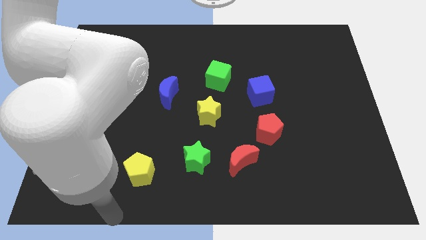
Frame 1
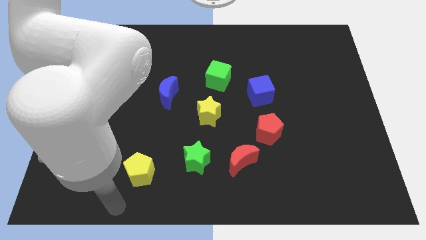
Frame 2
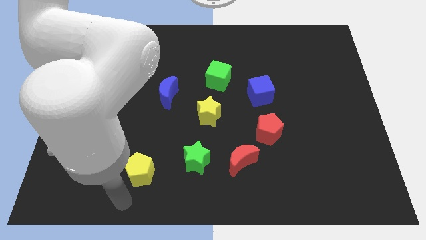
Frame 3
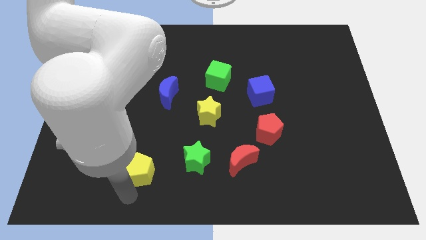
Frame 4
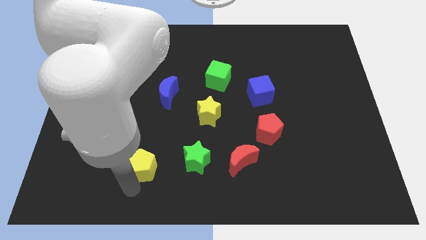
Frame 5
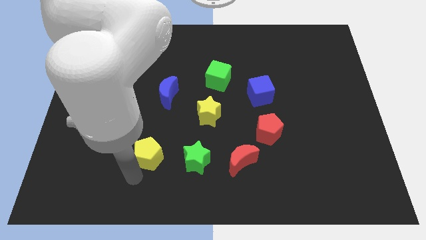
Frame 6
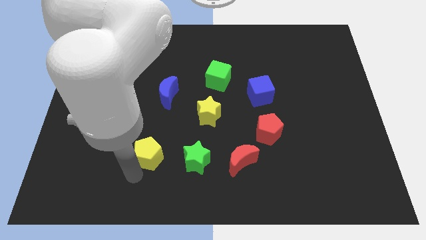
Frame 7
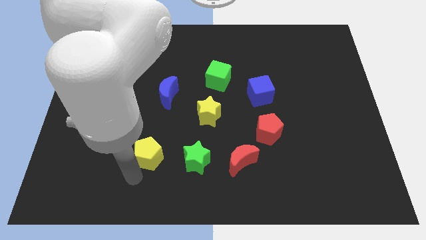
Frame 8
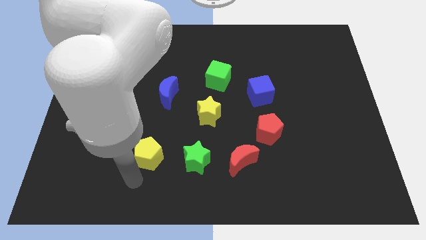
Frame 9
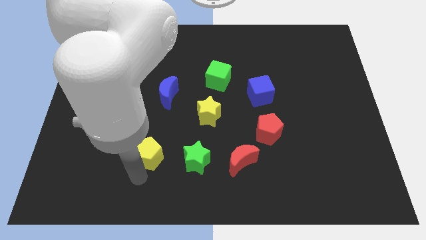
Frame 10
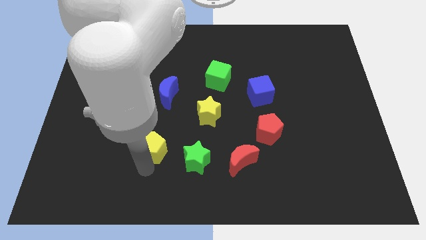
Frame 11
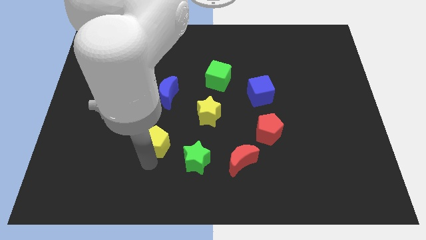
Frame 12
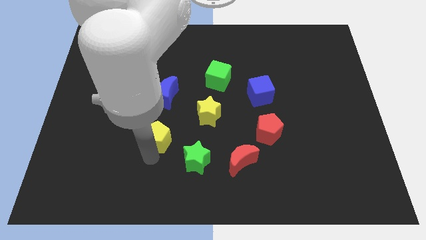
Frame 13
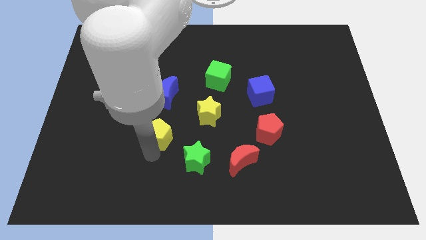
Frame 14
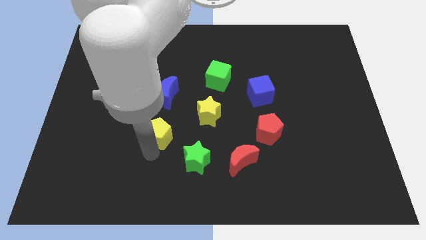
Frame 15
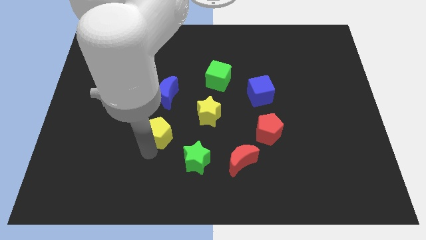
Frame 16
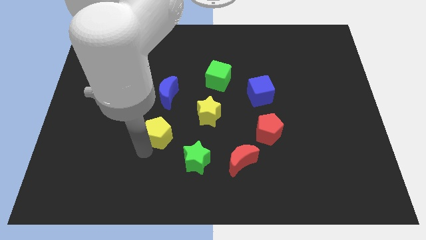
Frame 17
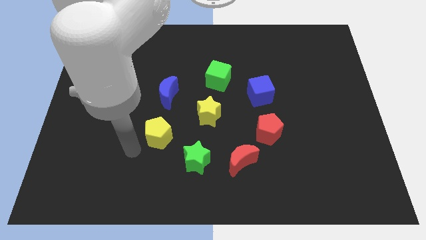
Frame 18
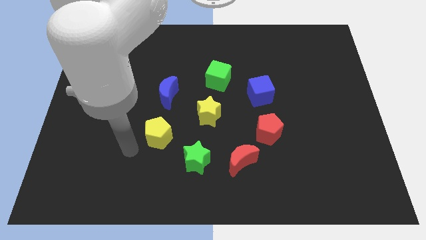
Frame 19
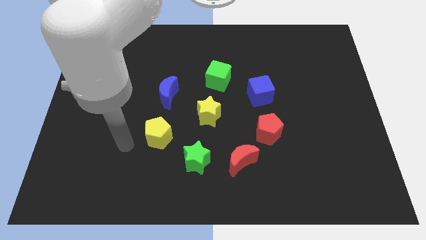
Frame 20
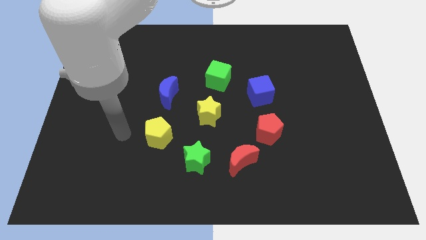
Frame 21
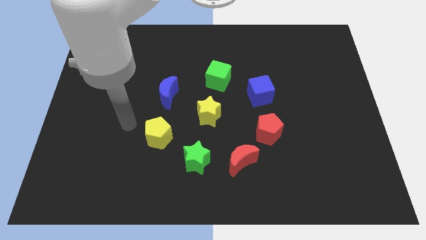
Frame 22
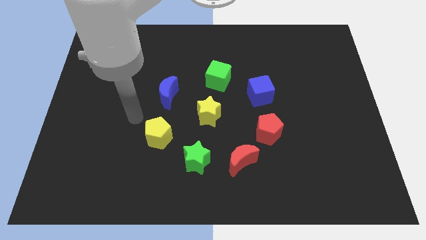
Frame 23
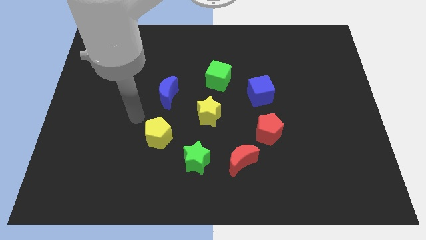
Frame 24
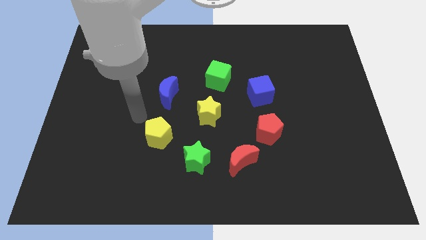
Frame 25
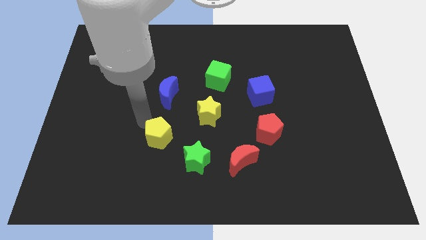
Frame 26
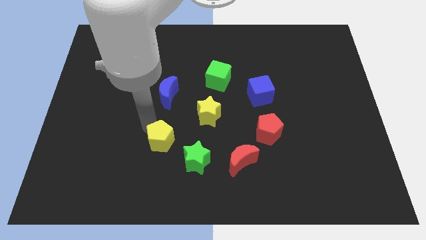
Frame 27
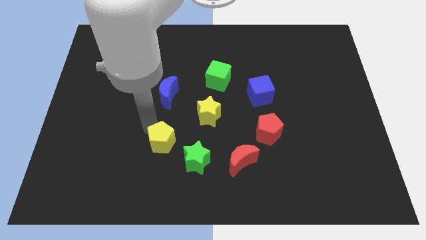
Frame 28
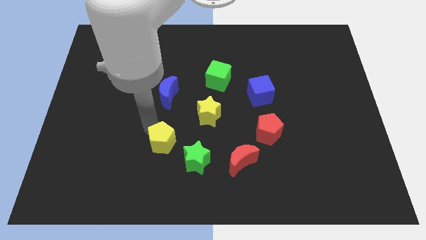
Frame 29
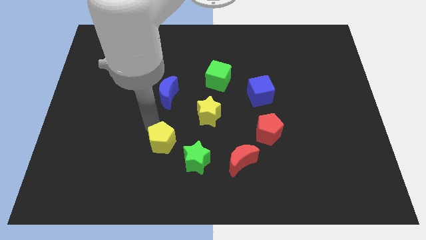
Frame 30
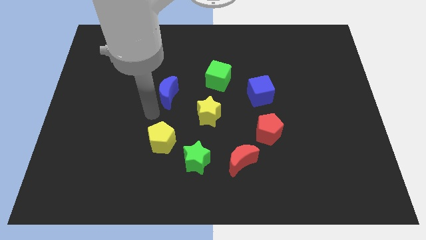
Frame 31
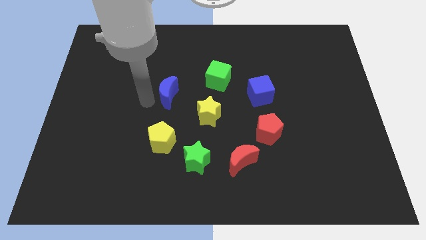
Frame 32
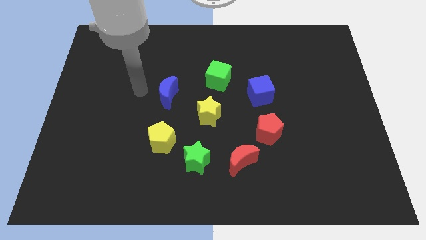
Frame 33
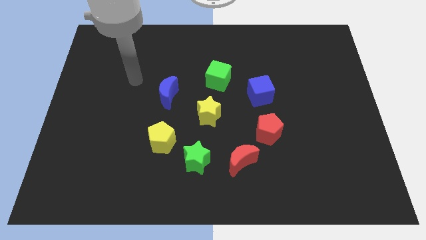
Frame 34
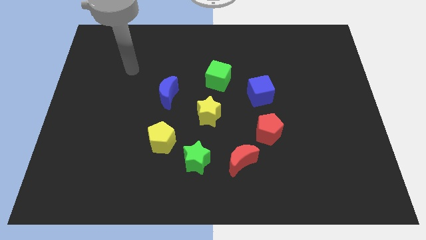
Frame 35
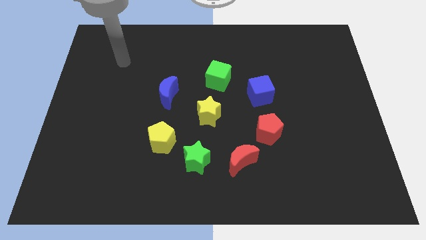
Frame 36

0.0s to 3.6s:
place yellow pentagon near to green star and blue crescent

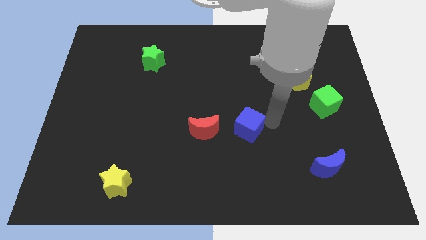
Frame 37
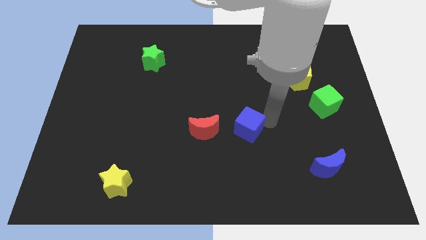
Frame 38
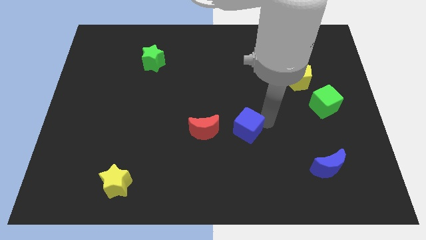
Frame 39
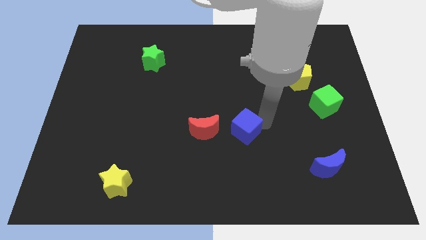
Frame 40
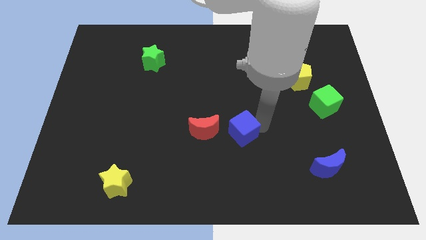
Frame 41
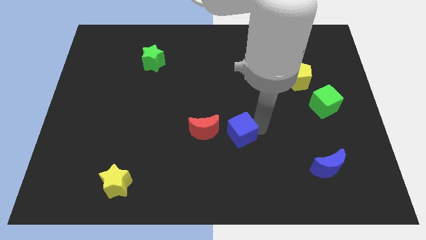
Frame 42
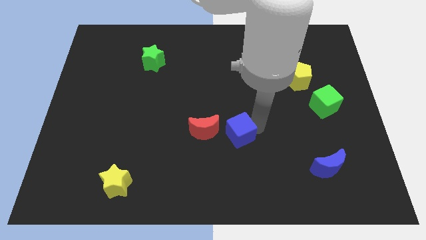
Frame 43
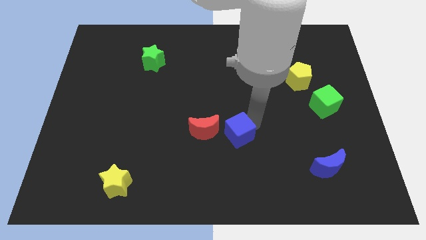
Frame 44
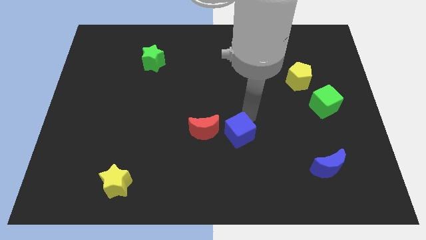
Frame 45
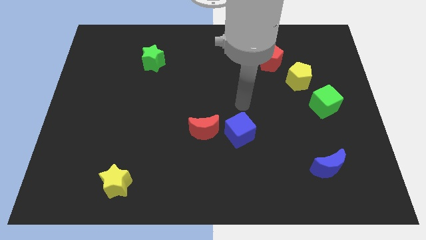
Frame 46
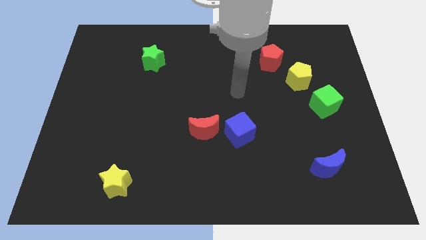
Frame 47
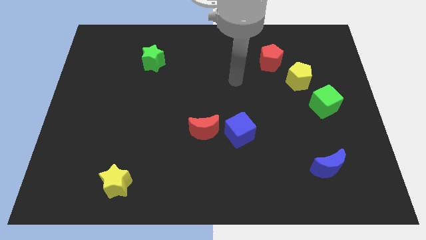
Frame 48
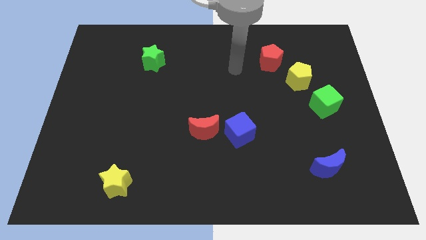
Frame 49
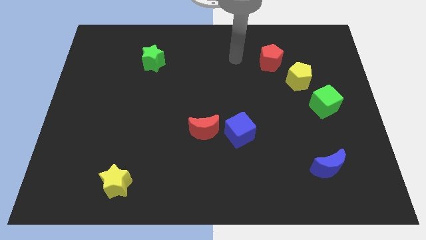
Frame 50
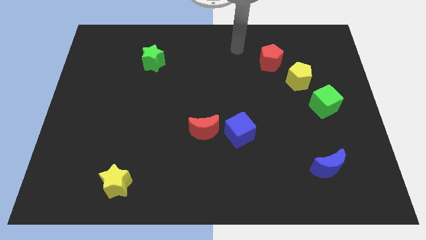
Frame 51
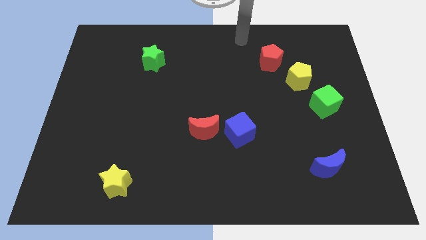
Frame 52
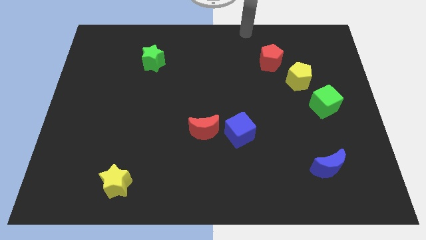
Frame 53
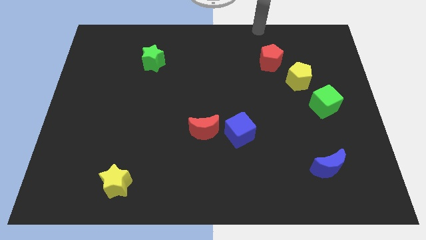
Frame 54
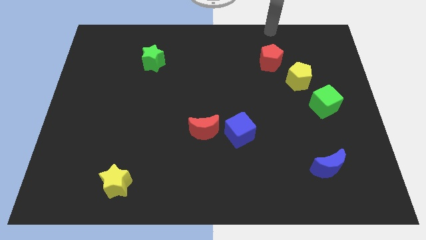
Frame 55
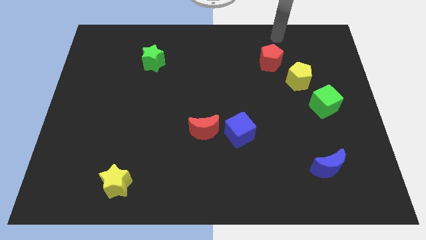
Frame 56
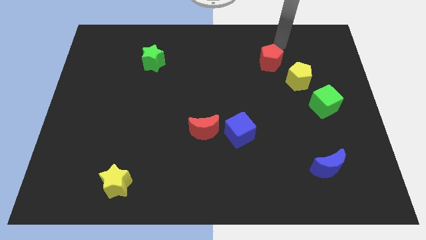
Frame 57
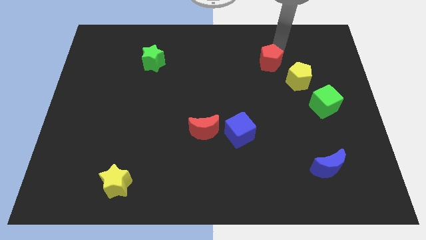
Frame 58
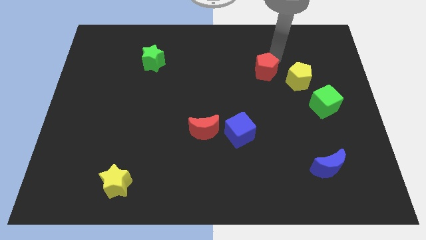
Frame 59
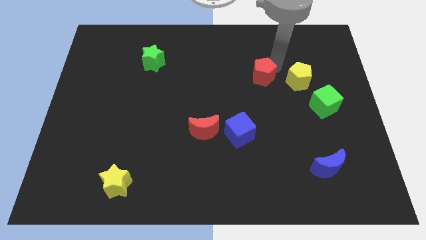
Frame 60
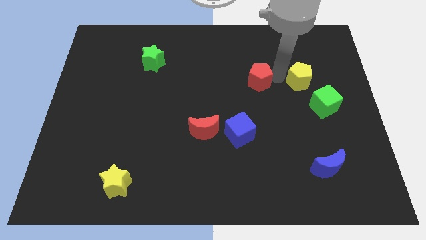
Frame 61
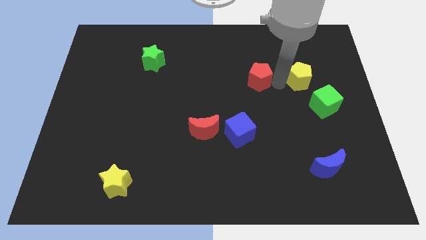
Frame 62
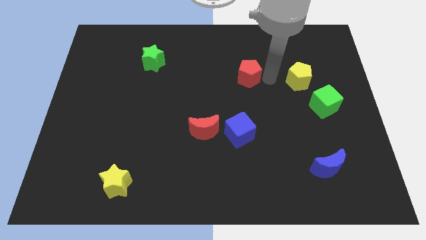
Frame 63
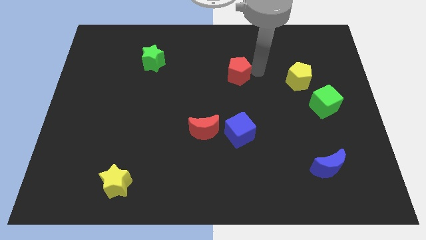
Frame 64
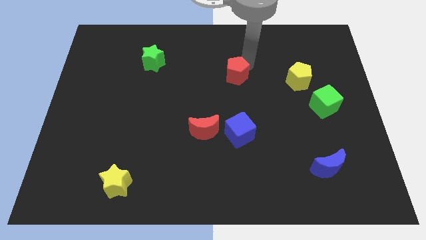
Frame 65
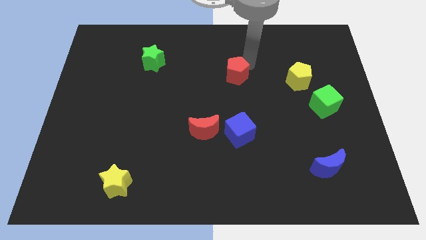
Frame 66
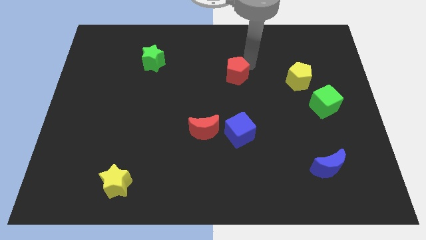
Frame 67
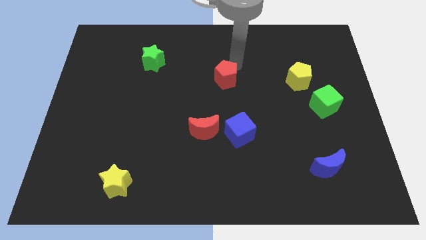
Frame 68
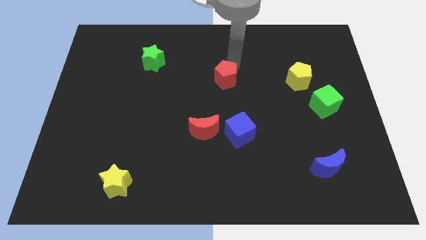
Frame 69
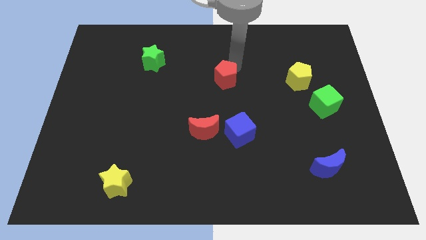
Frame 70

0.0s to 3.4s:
move red pentagon to the top center

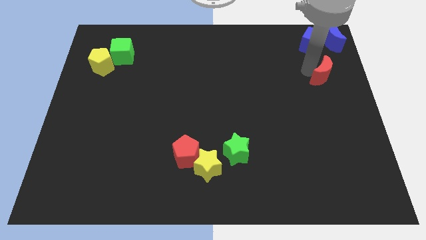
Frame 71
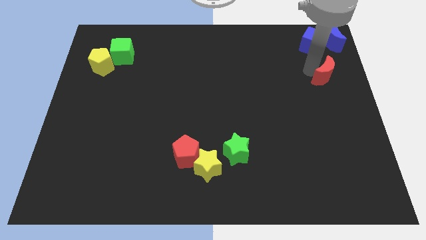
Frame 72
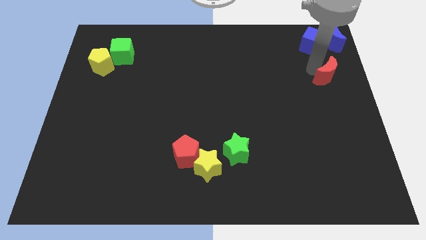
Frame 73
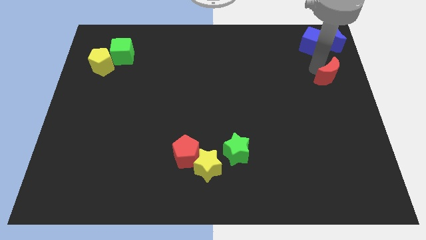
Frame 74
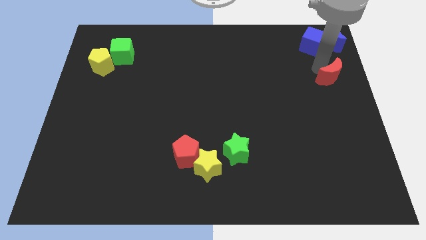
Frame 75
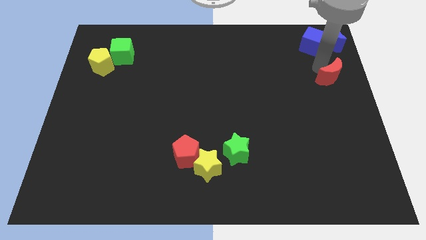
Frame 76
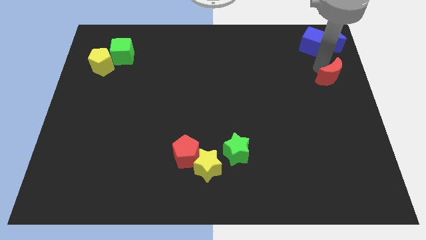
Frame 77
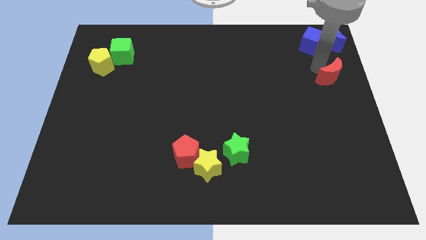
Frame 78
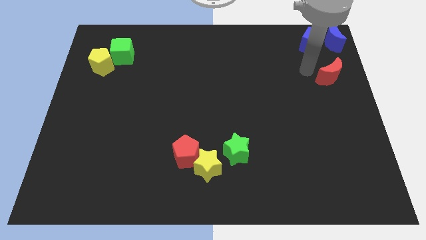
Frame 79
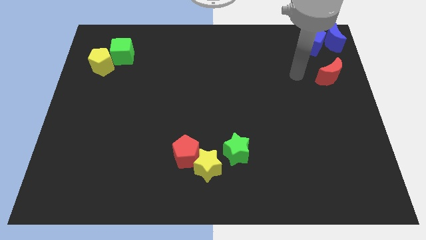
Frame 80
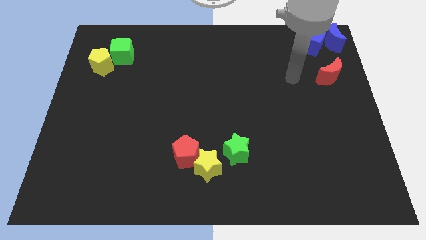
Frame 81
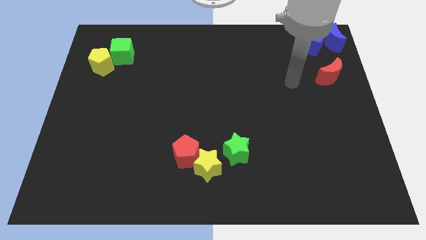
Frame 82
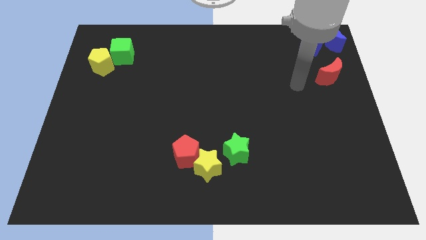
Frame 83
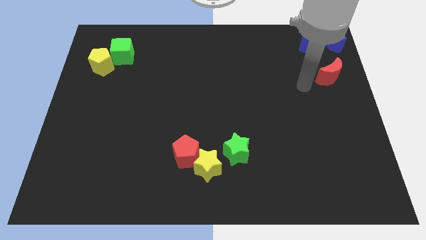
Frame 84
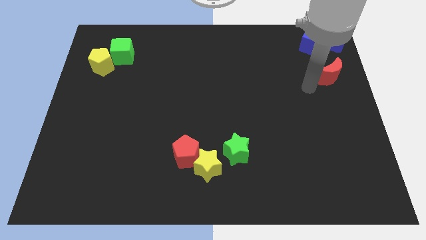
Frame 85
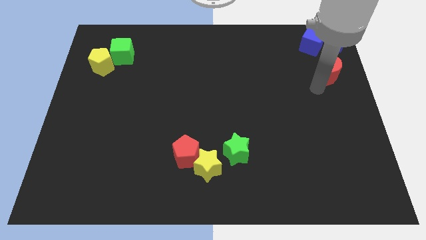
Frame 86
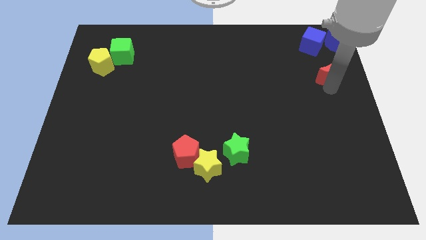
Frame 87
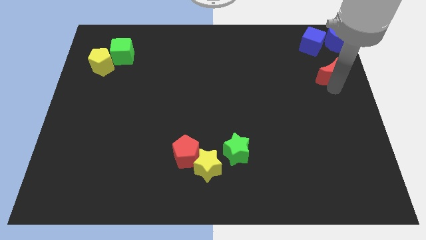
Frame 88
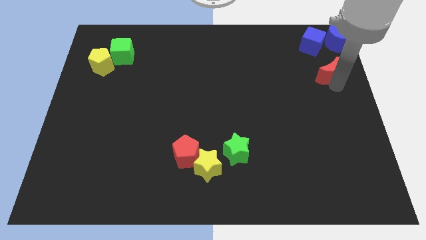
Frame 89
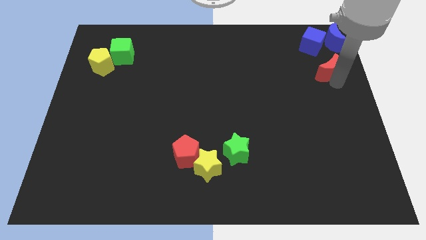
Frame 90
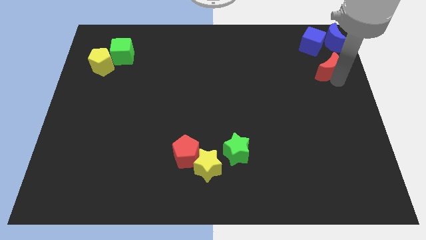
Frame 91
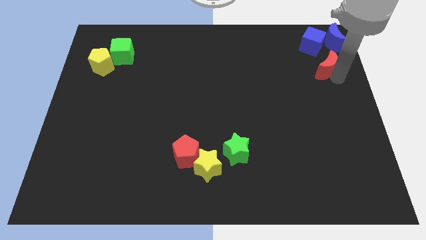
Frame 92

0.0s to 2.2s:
adjust the red crescent under the blue blocks
